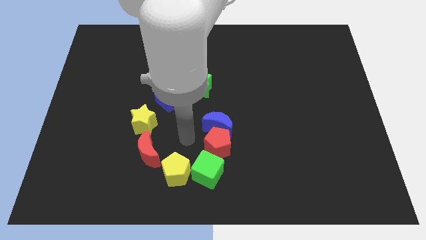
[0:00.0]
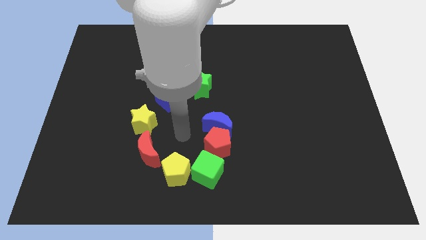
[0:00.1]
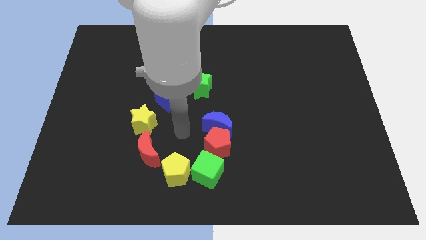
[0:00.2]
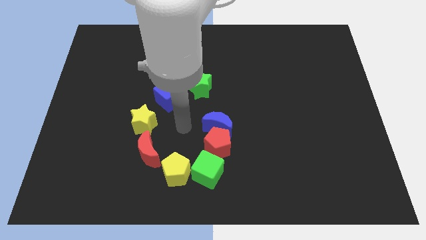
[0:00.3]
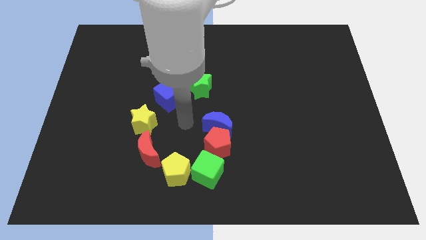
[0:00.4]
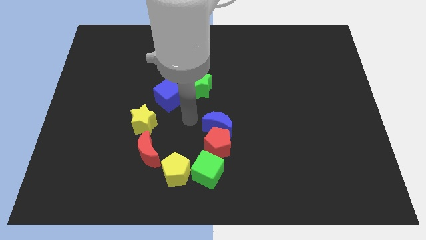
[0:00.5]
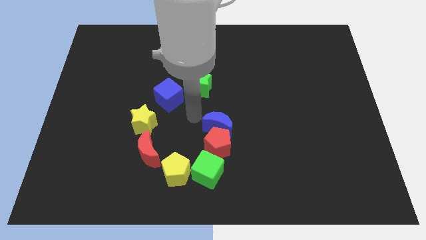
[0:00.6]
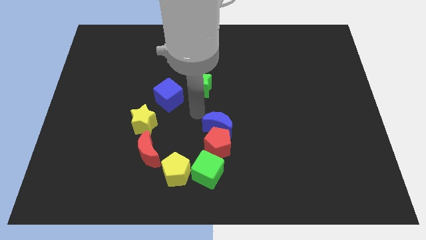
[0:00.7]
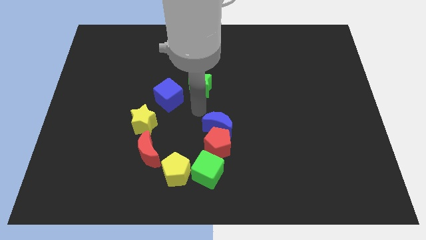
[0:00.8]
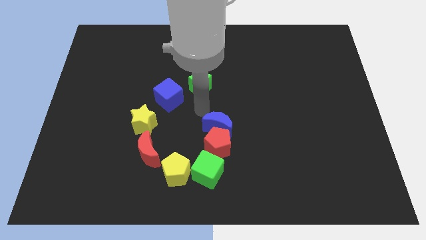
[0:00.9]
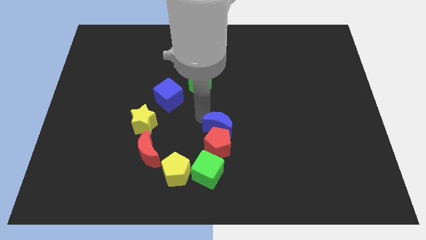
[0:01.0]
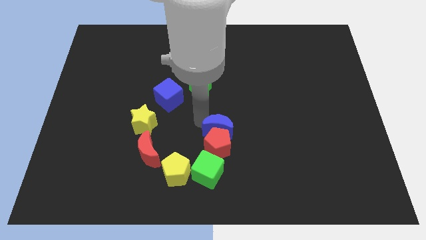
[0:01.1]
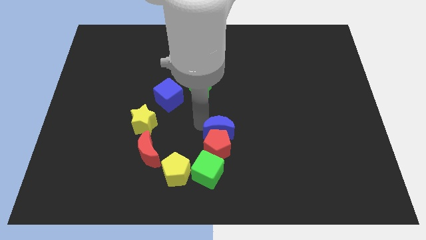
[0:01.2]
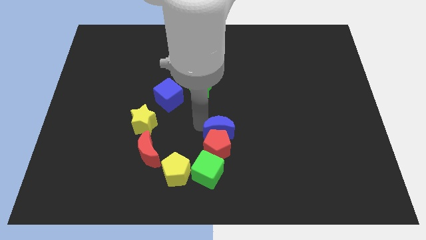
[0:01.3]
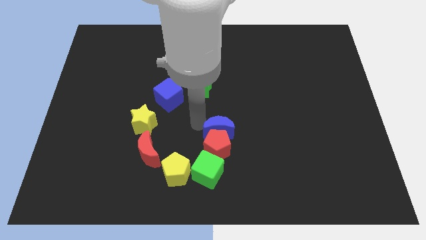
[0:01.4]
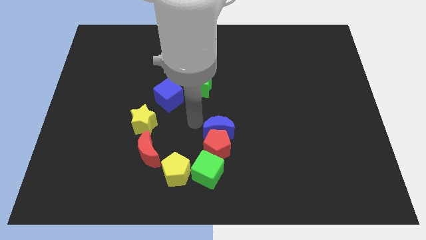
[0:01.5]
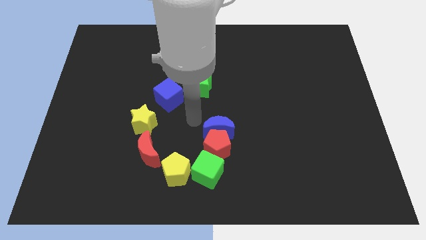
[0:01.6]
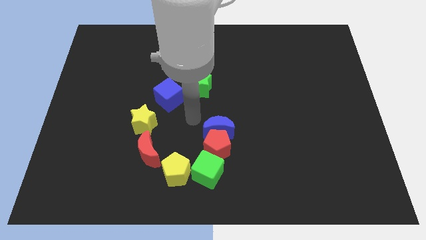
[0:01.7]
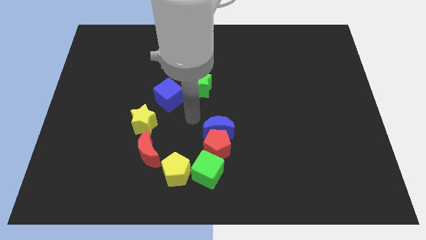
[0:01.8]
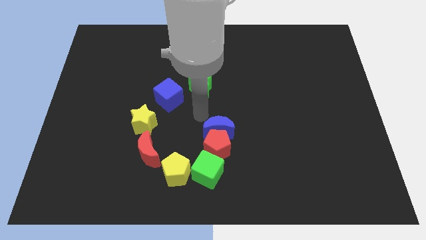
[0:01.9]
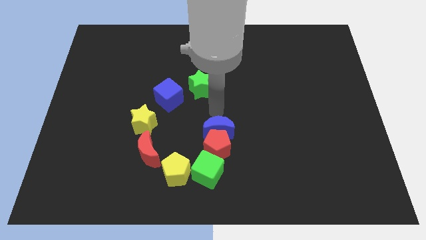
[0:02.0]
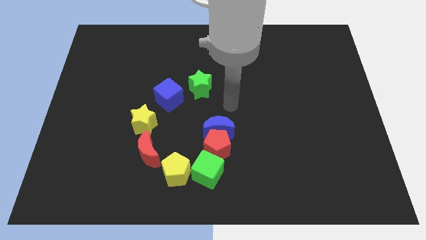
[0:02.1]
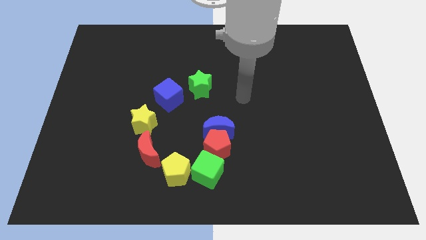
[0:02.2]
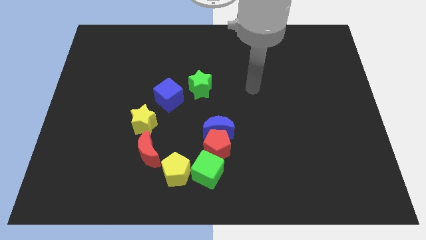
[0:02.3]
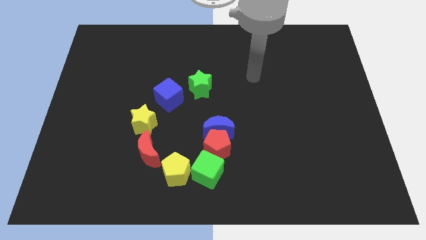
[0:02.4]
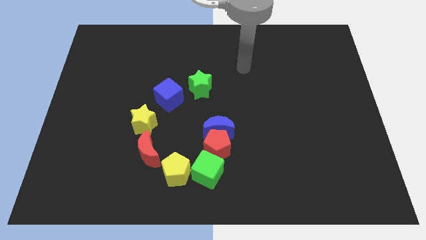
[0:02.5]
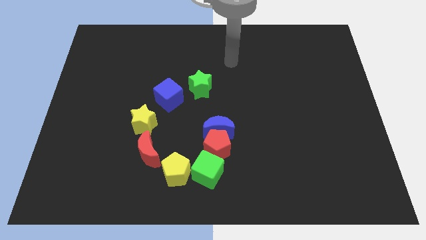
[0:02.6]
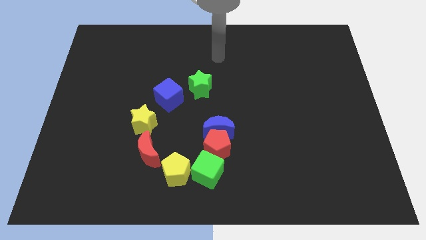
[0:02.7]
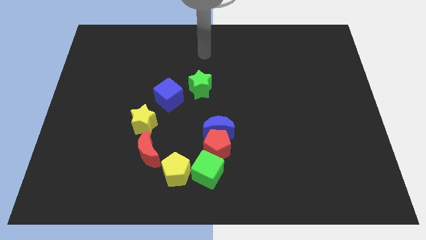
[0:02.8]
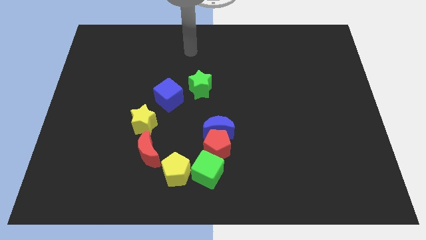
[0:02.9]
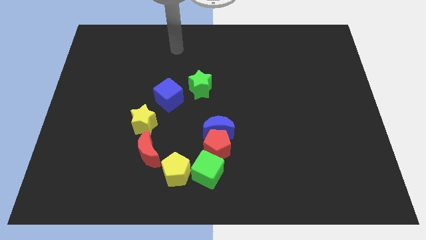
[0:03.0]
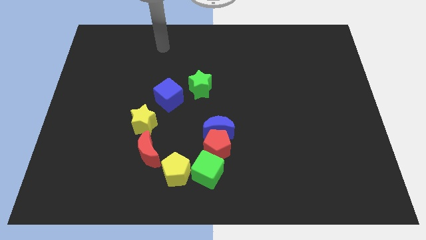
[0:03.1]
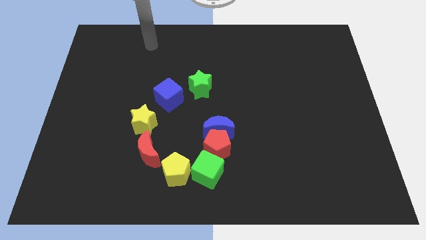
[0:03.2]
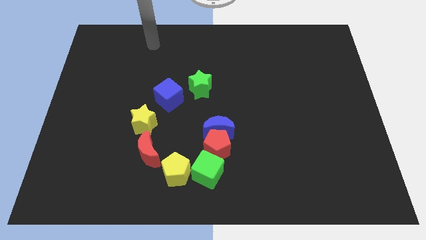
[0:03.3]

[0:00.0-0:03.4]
push the blue crescent into the red pentagon

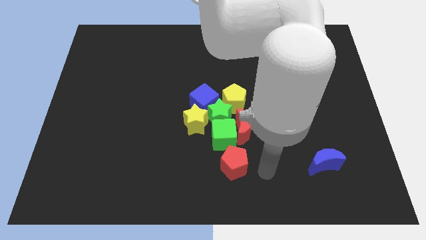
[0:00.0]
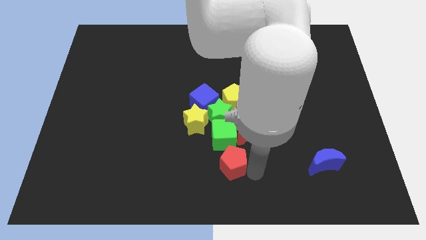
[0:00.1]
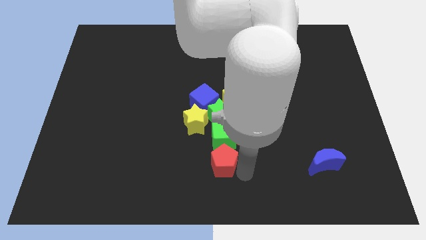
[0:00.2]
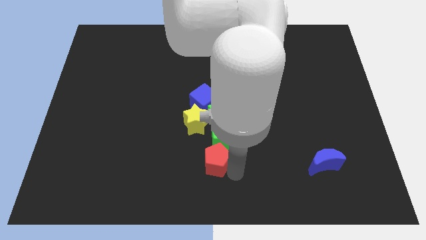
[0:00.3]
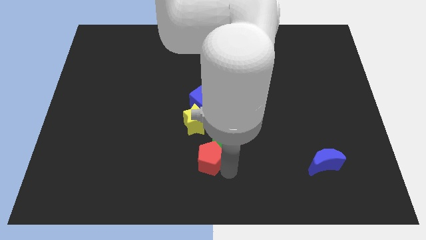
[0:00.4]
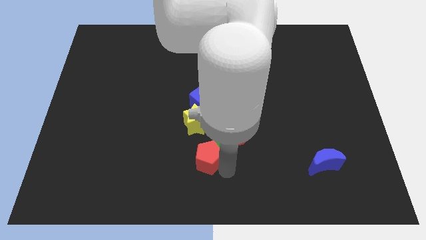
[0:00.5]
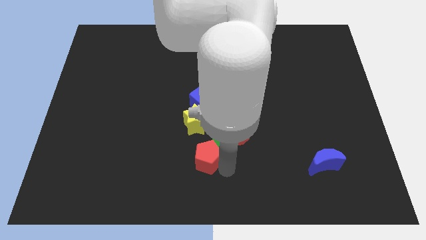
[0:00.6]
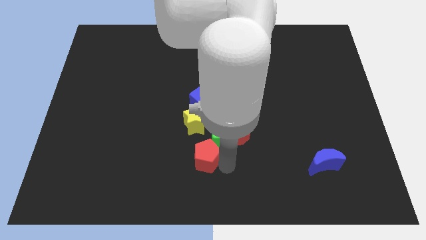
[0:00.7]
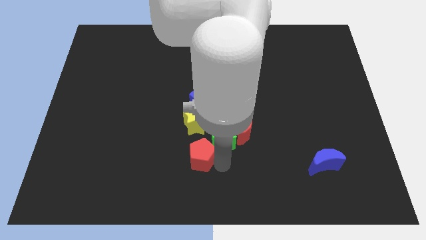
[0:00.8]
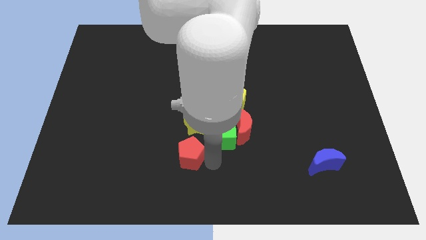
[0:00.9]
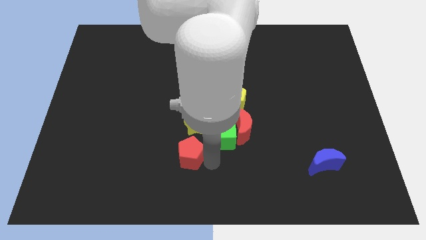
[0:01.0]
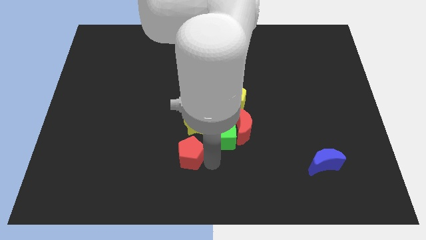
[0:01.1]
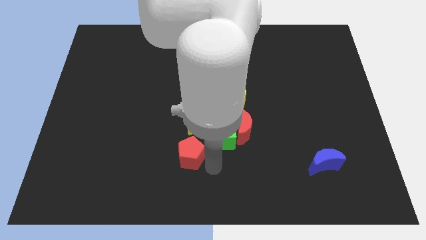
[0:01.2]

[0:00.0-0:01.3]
separate red pentagon from green cube

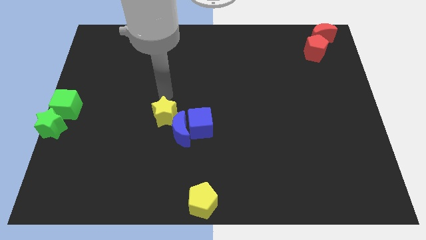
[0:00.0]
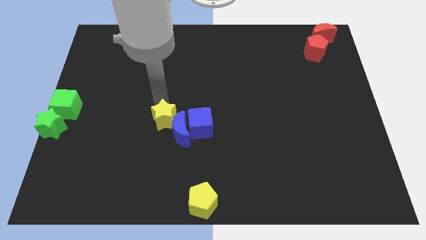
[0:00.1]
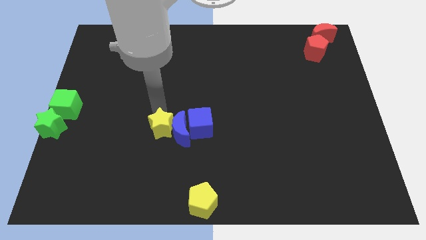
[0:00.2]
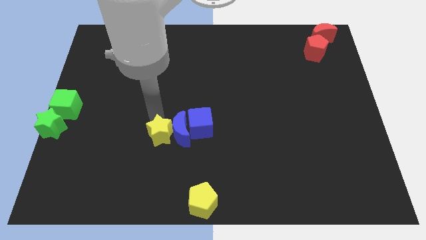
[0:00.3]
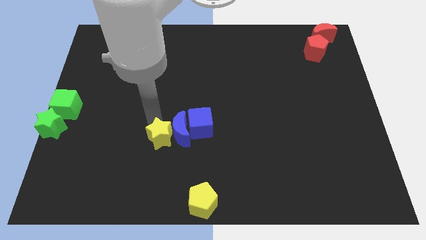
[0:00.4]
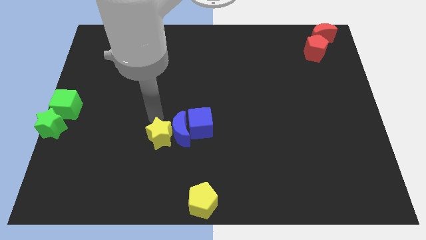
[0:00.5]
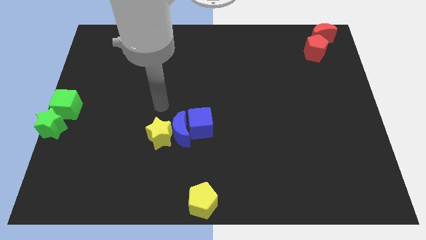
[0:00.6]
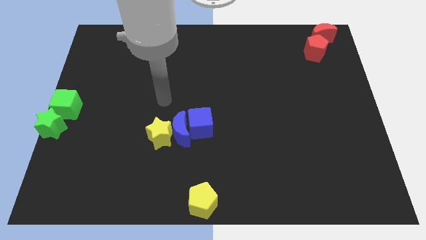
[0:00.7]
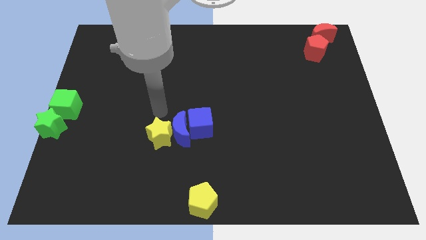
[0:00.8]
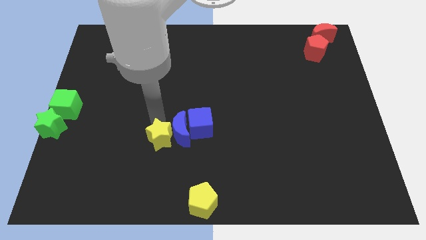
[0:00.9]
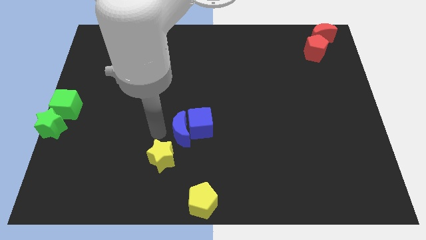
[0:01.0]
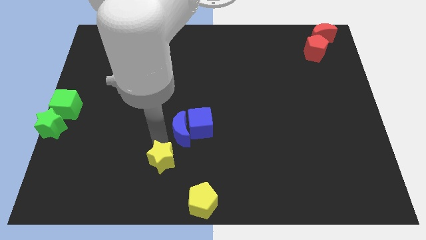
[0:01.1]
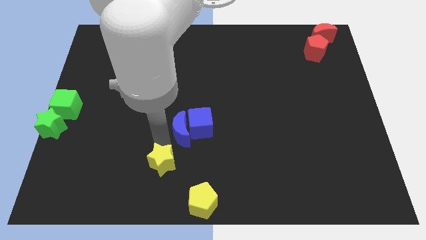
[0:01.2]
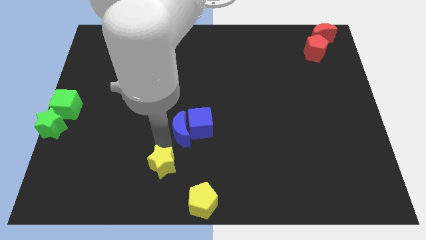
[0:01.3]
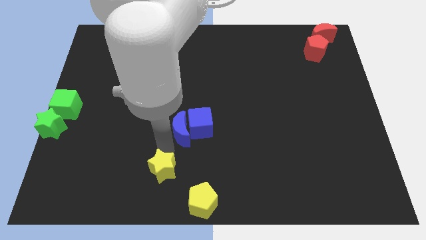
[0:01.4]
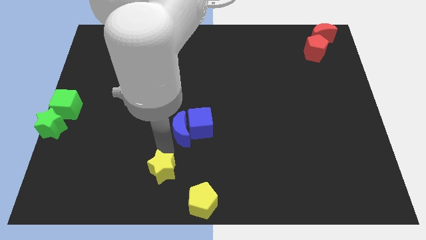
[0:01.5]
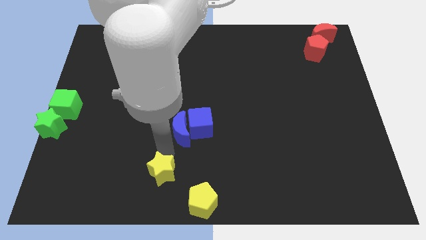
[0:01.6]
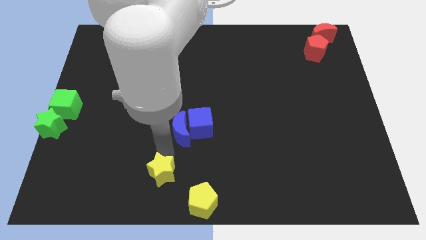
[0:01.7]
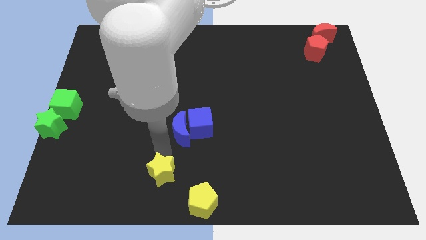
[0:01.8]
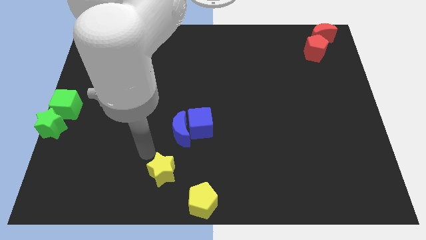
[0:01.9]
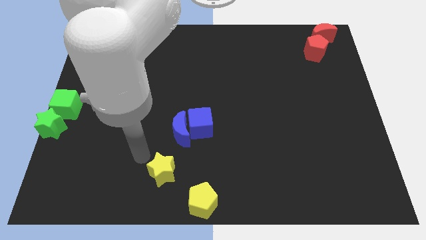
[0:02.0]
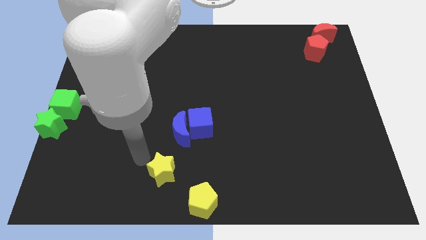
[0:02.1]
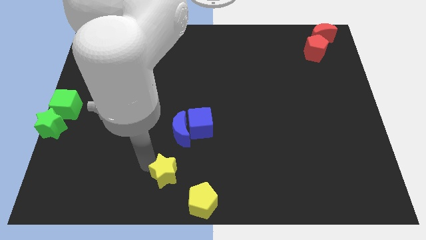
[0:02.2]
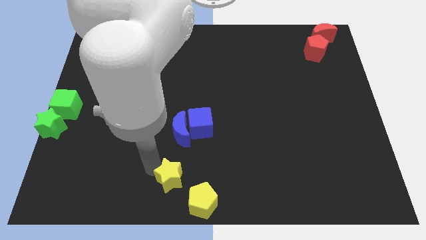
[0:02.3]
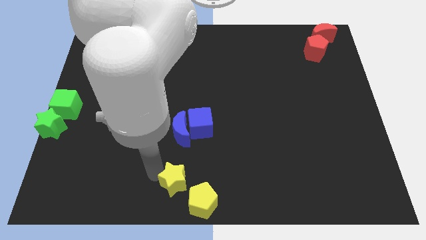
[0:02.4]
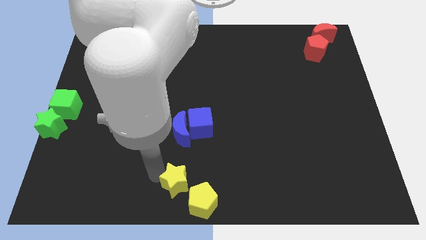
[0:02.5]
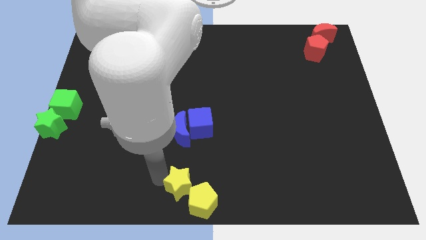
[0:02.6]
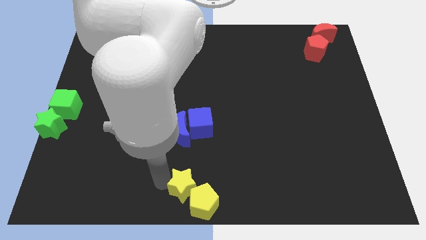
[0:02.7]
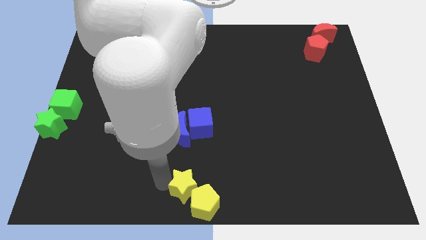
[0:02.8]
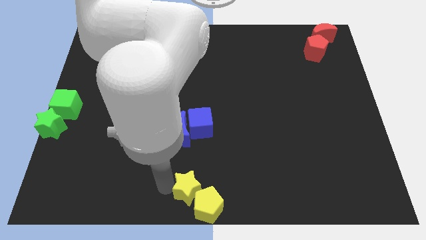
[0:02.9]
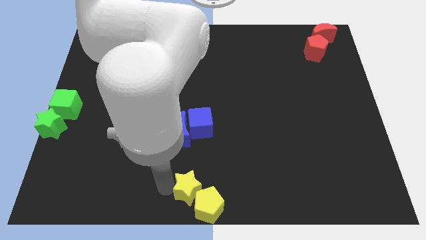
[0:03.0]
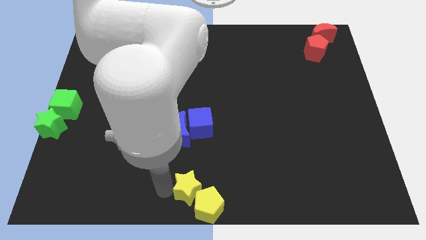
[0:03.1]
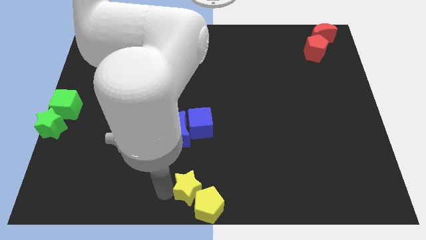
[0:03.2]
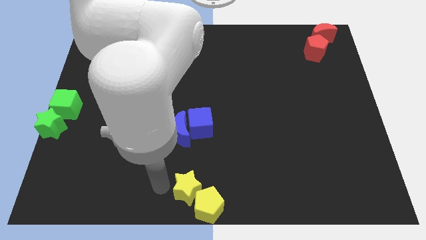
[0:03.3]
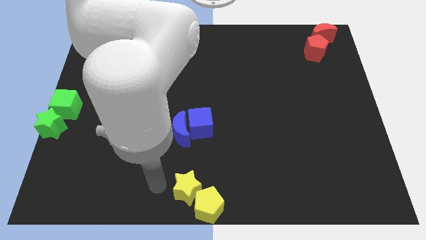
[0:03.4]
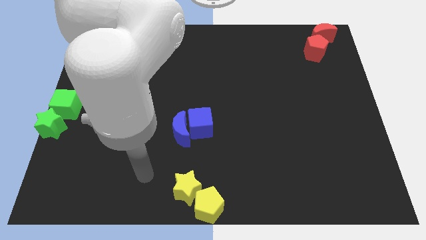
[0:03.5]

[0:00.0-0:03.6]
put the group of yellow blocks at the bottom center of the board

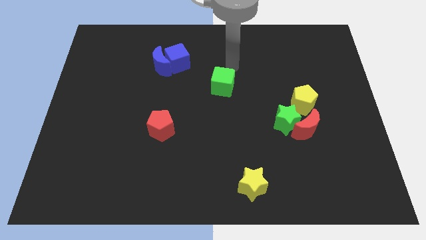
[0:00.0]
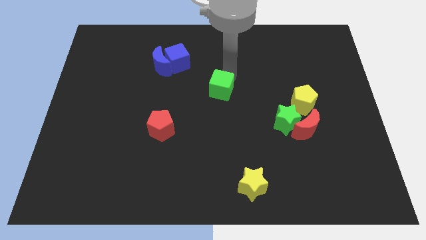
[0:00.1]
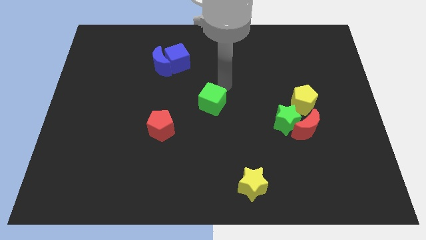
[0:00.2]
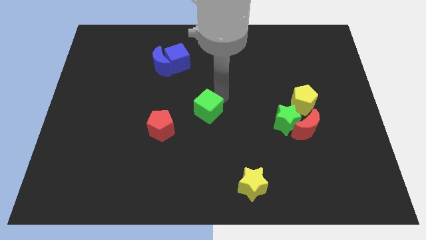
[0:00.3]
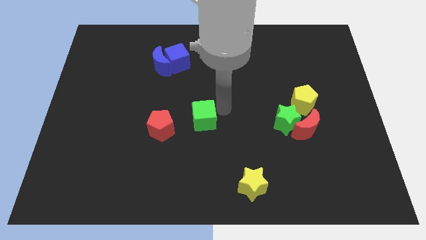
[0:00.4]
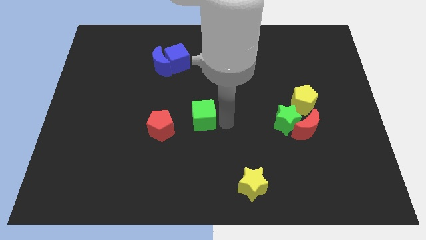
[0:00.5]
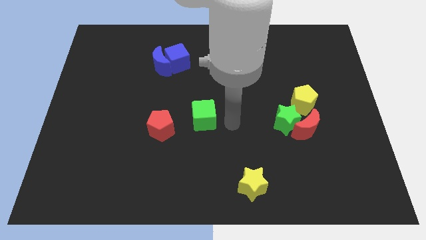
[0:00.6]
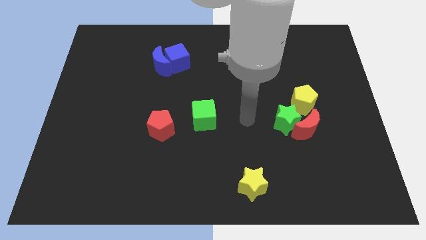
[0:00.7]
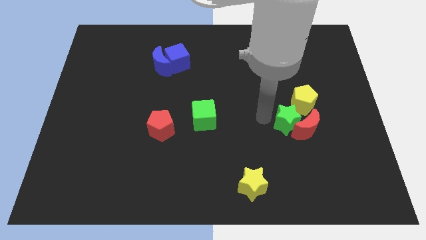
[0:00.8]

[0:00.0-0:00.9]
place the green cube at the centre of the board
